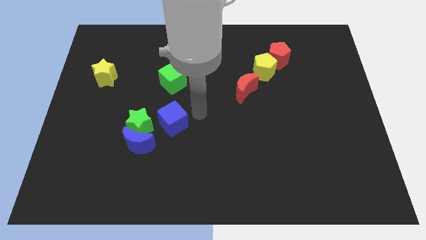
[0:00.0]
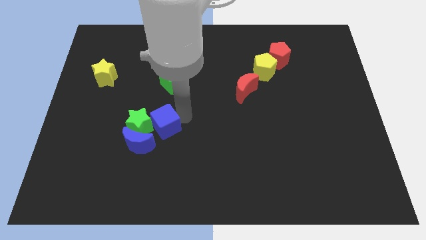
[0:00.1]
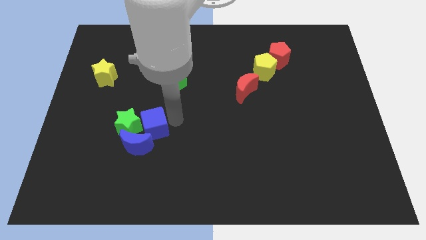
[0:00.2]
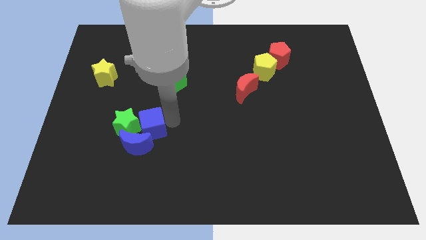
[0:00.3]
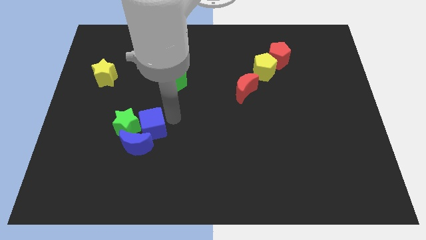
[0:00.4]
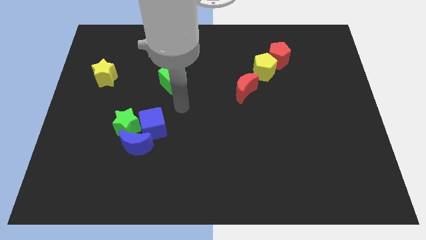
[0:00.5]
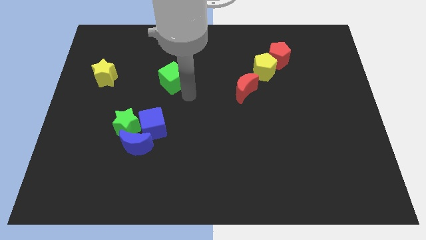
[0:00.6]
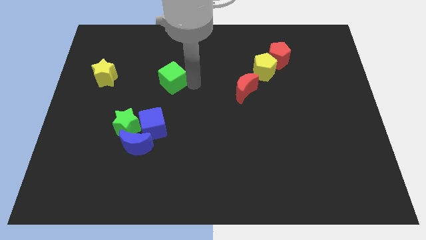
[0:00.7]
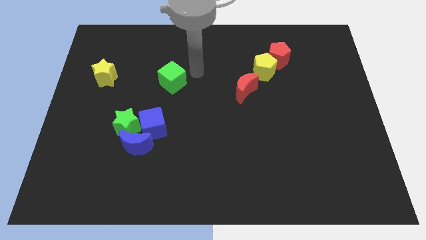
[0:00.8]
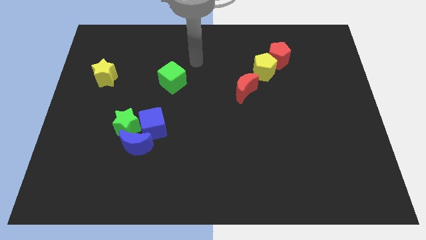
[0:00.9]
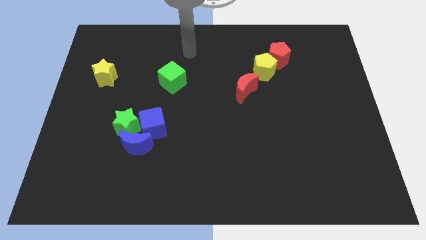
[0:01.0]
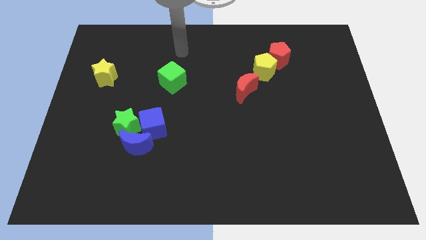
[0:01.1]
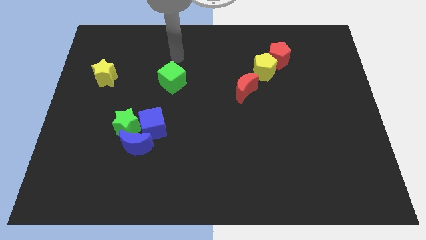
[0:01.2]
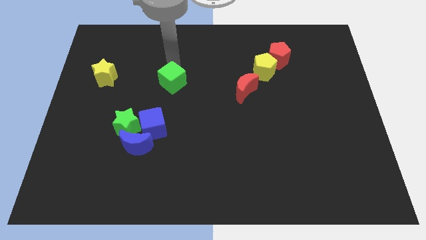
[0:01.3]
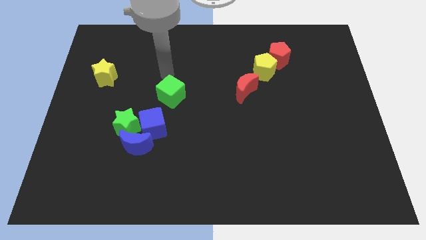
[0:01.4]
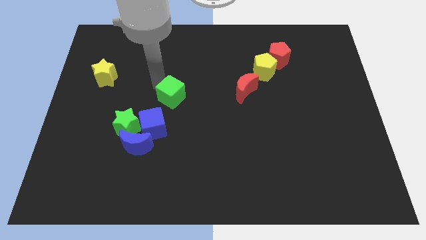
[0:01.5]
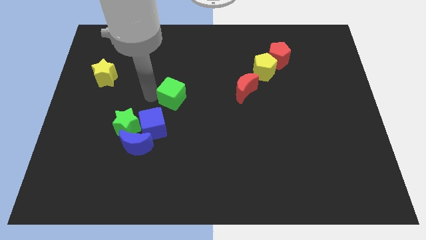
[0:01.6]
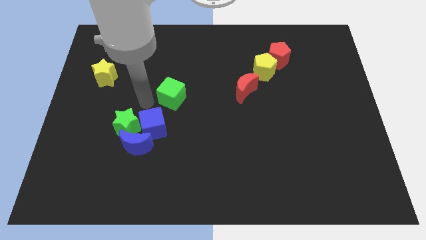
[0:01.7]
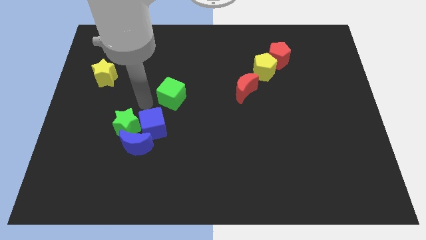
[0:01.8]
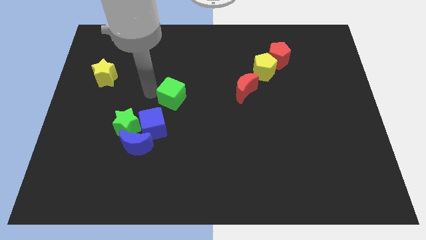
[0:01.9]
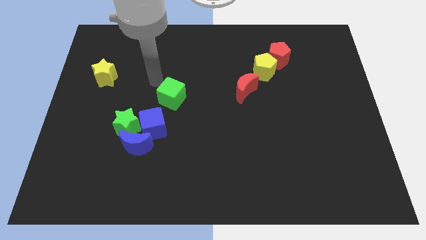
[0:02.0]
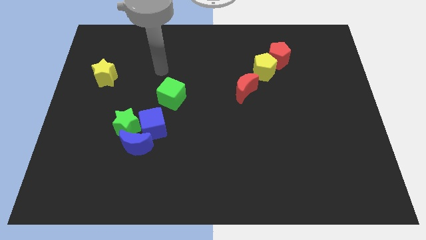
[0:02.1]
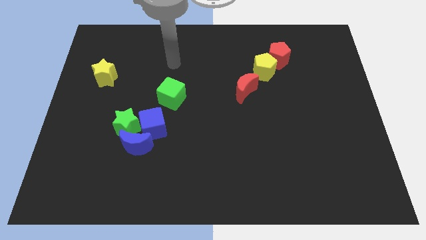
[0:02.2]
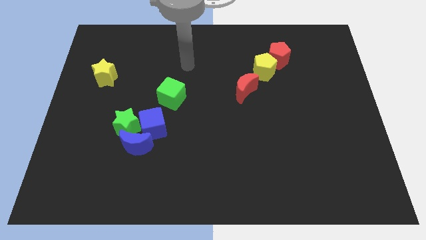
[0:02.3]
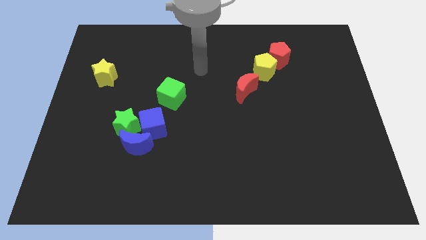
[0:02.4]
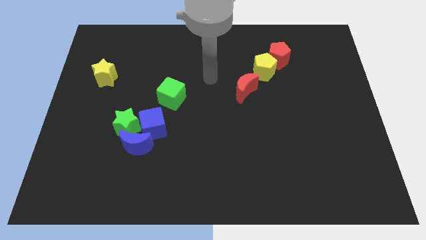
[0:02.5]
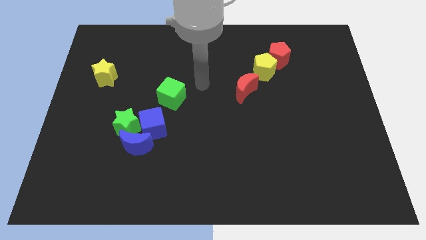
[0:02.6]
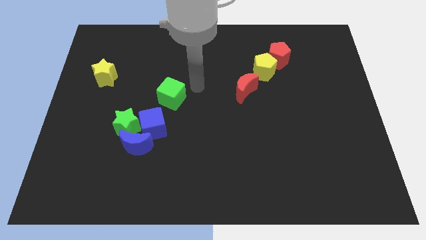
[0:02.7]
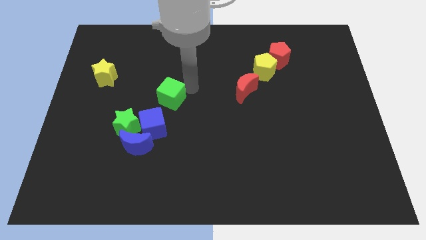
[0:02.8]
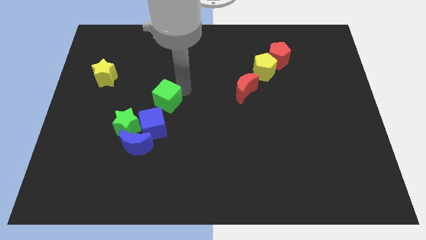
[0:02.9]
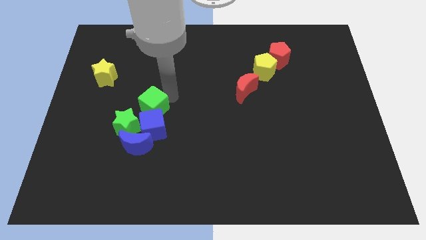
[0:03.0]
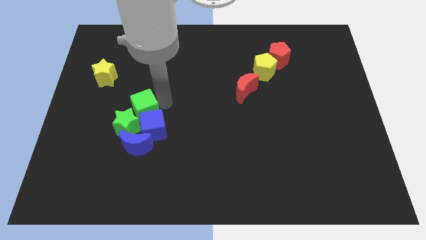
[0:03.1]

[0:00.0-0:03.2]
place the green cube vertically above the blue cube

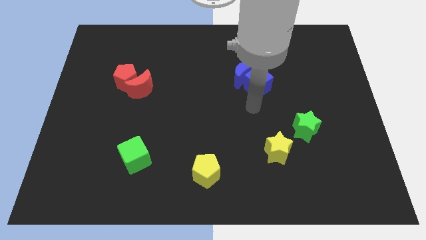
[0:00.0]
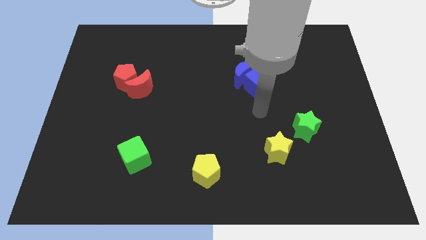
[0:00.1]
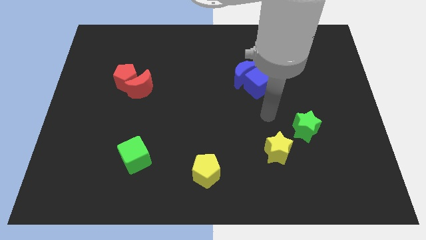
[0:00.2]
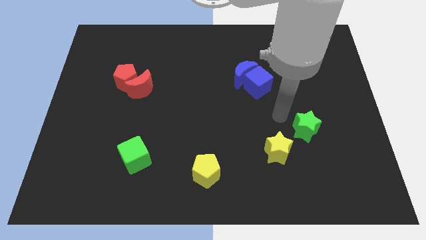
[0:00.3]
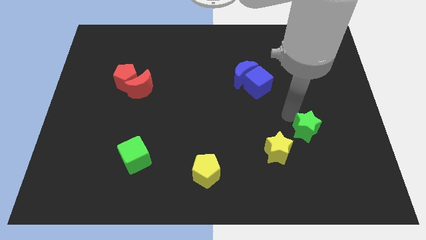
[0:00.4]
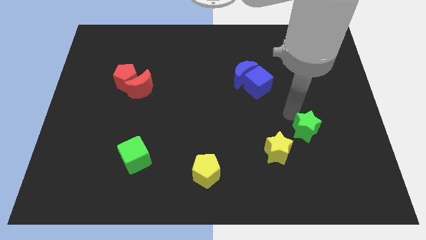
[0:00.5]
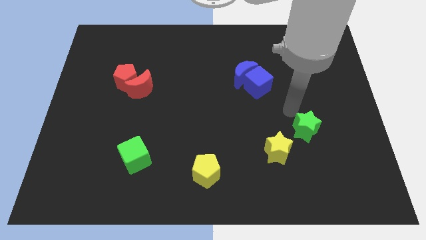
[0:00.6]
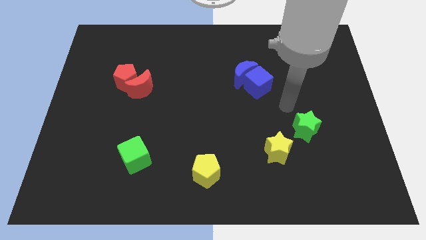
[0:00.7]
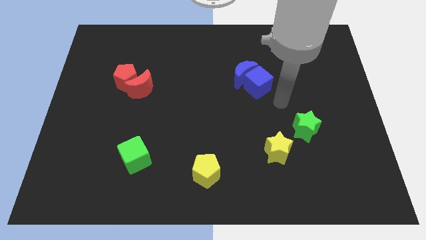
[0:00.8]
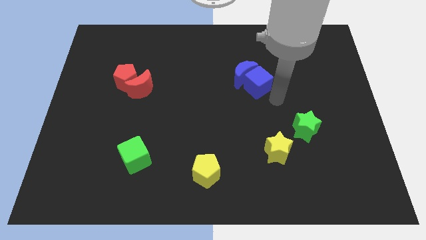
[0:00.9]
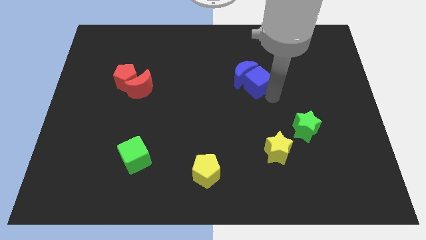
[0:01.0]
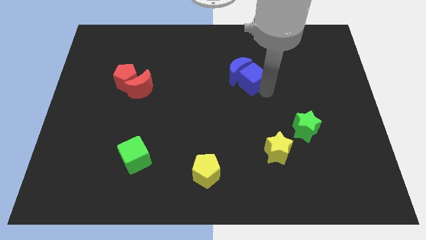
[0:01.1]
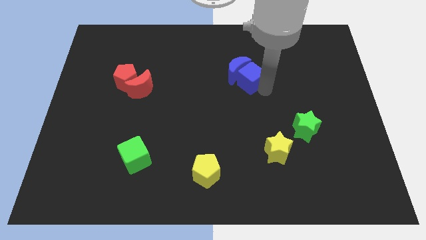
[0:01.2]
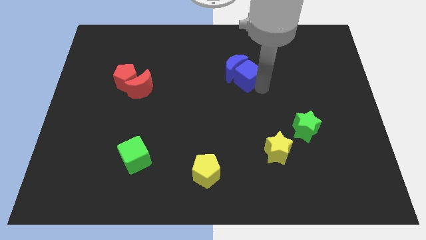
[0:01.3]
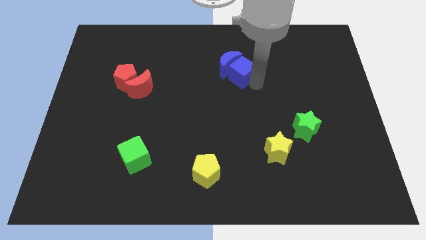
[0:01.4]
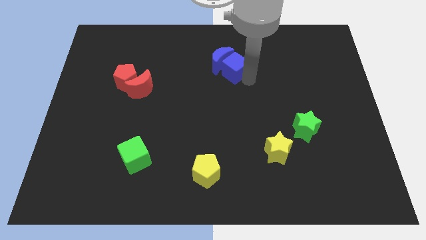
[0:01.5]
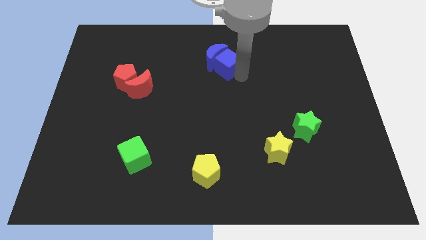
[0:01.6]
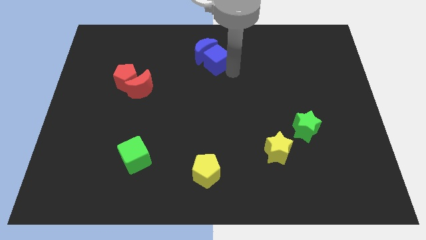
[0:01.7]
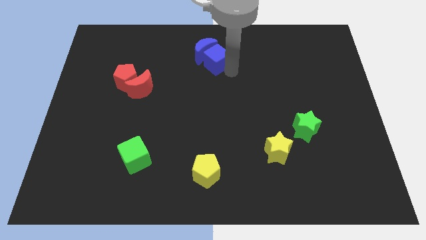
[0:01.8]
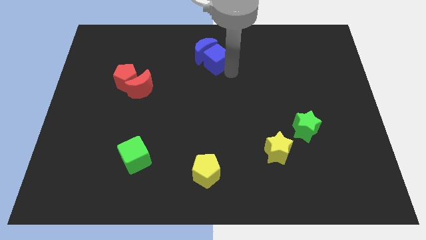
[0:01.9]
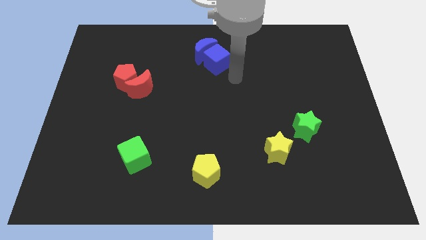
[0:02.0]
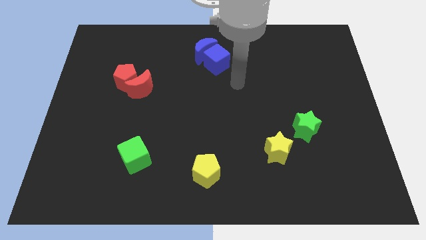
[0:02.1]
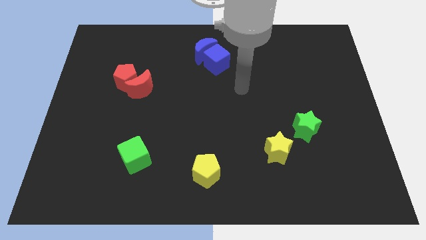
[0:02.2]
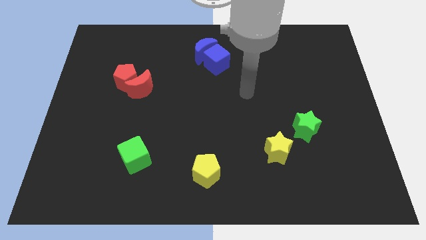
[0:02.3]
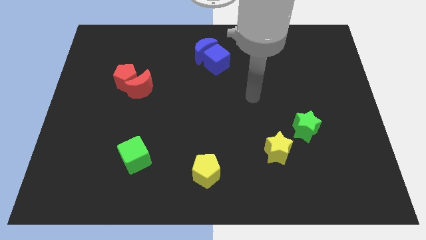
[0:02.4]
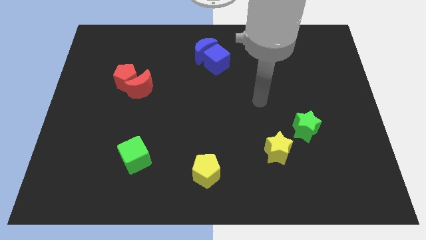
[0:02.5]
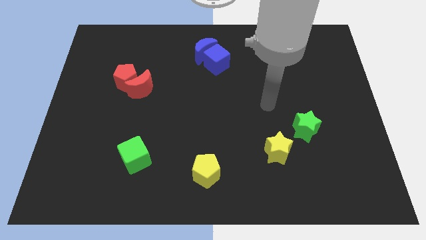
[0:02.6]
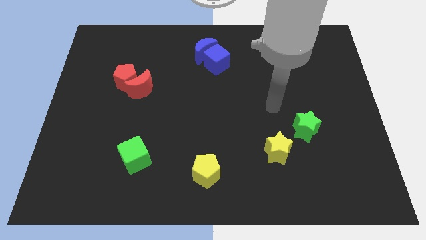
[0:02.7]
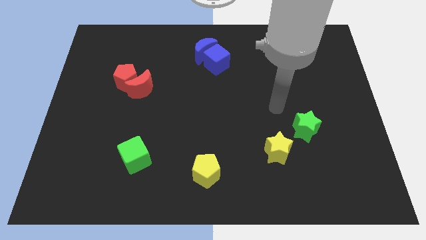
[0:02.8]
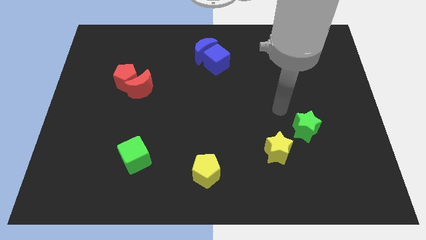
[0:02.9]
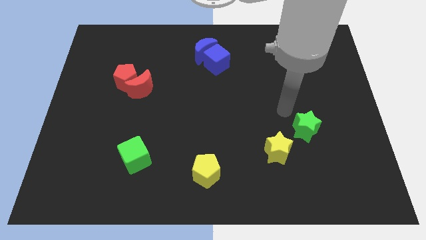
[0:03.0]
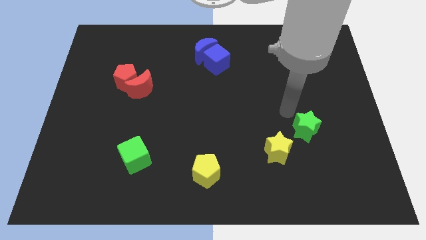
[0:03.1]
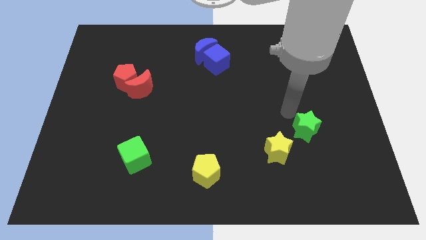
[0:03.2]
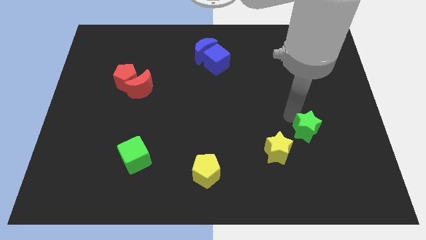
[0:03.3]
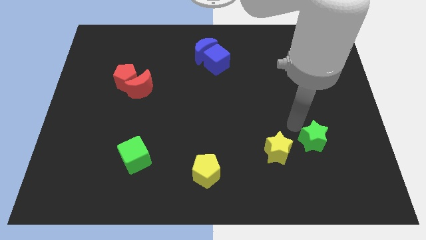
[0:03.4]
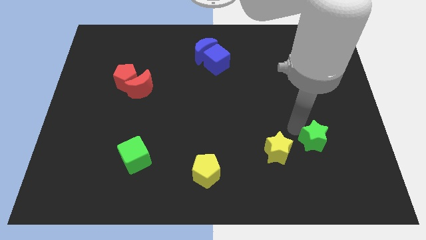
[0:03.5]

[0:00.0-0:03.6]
push the blue moon with the blue cube to top center

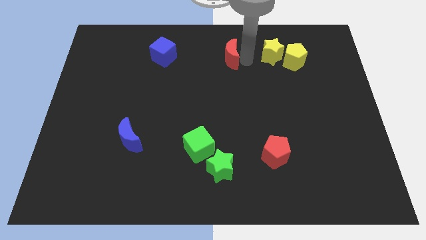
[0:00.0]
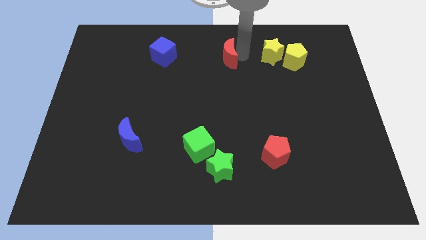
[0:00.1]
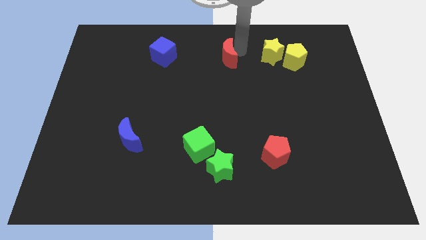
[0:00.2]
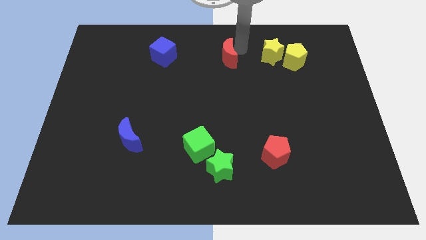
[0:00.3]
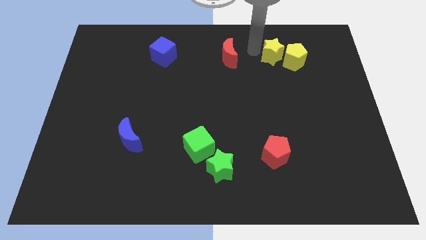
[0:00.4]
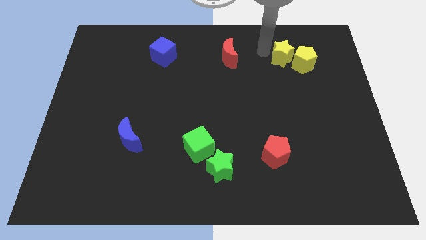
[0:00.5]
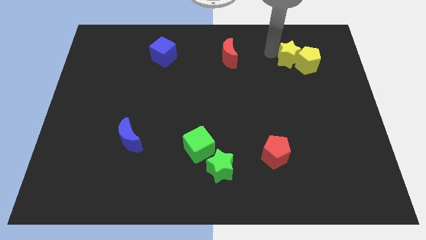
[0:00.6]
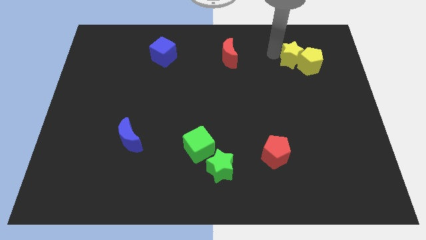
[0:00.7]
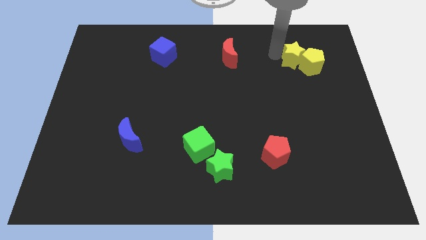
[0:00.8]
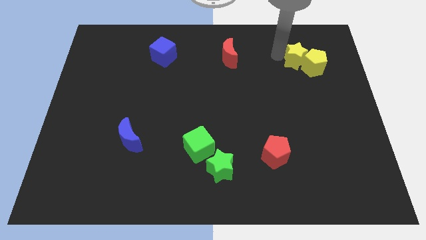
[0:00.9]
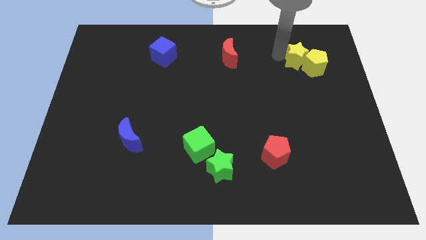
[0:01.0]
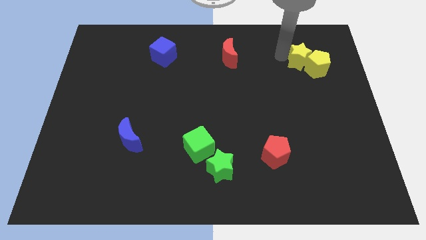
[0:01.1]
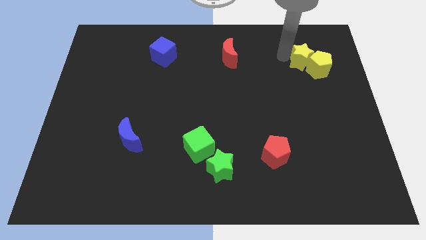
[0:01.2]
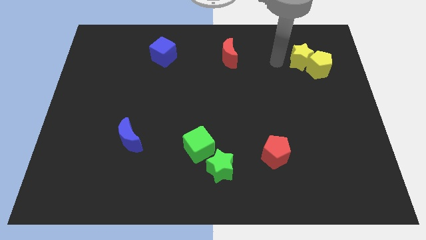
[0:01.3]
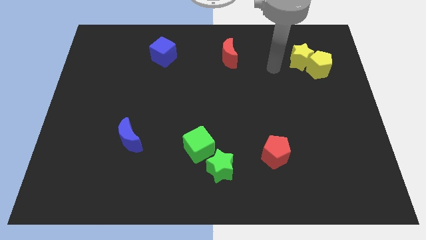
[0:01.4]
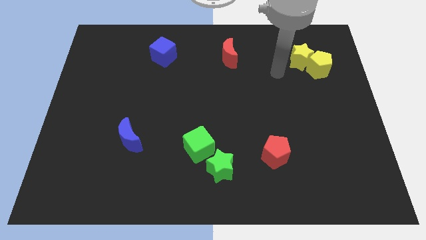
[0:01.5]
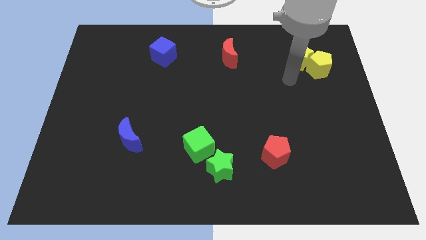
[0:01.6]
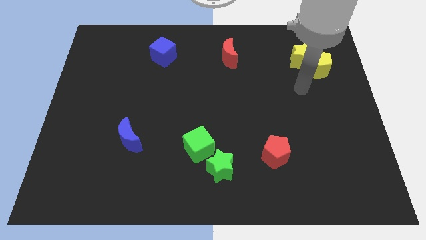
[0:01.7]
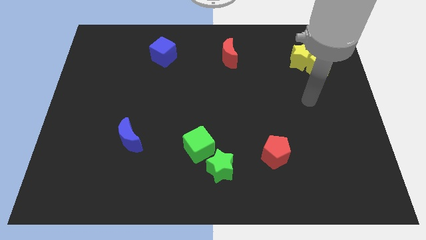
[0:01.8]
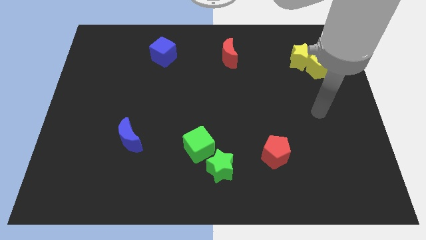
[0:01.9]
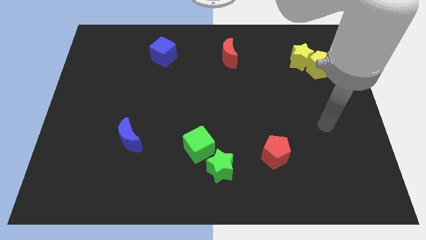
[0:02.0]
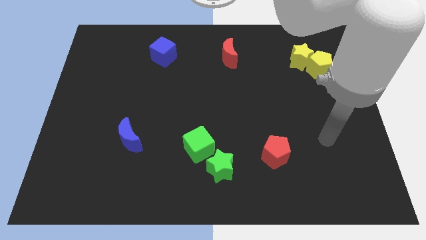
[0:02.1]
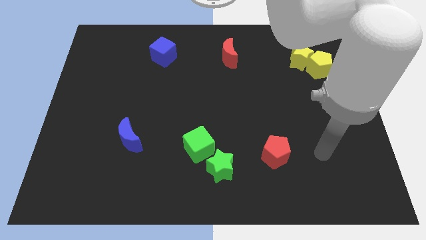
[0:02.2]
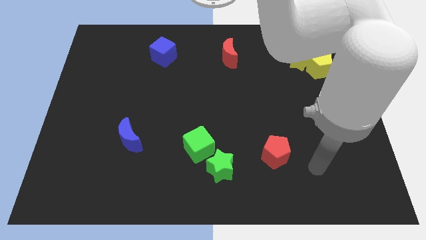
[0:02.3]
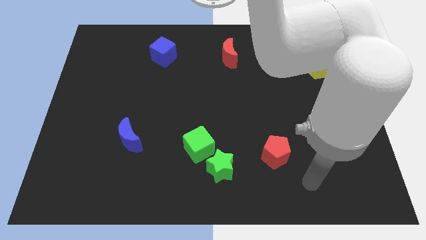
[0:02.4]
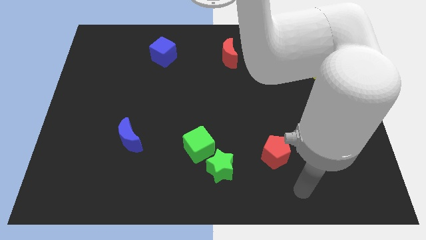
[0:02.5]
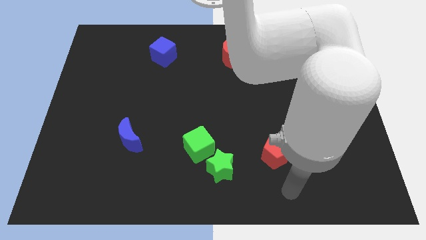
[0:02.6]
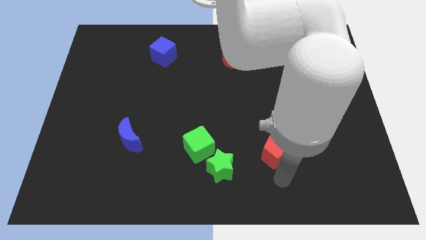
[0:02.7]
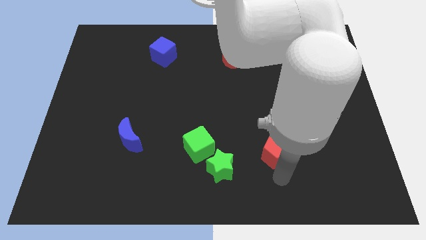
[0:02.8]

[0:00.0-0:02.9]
push the yellow blocks slightly to the right
